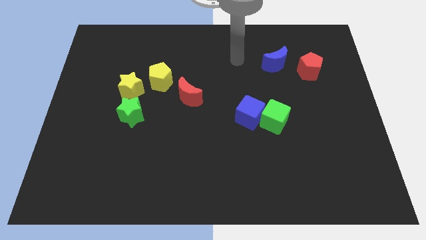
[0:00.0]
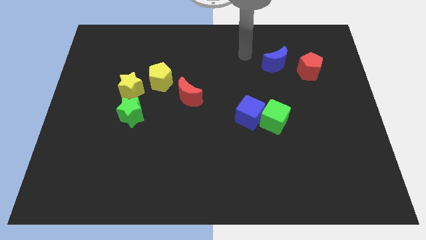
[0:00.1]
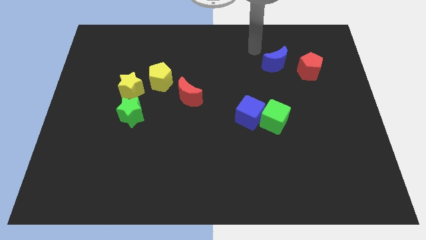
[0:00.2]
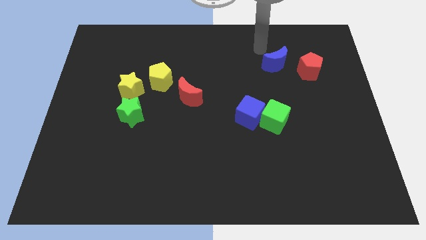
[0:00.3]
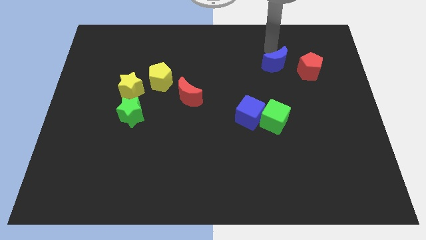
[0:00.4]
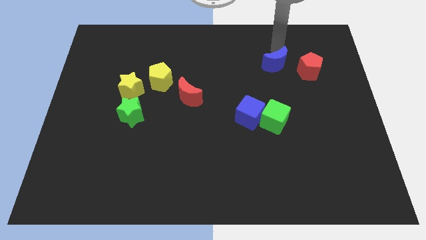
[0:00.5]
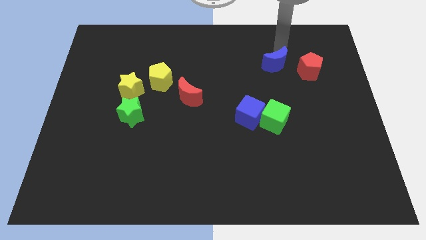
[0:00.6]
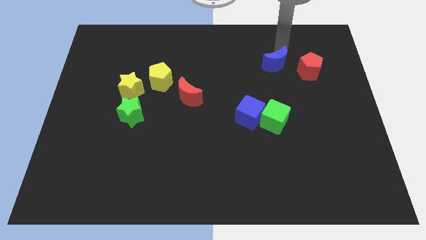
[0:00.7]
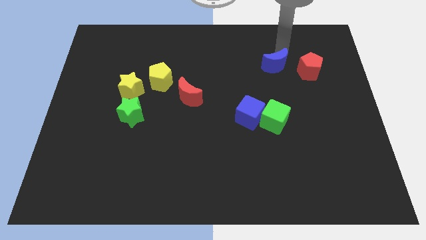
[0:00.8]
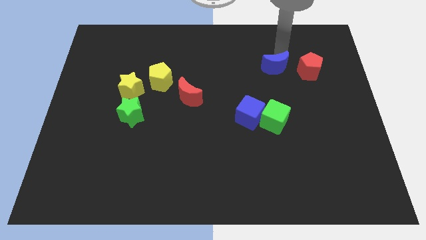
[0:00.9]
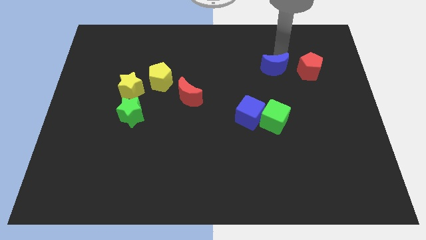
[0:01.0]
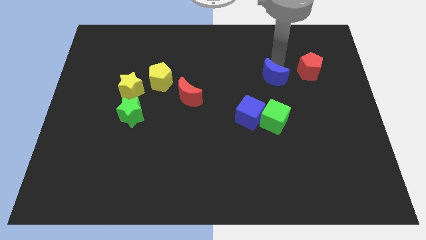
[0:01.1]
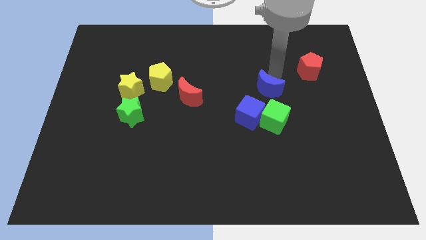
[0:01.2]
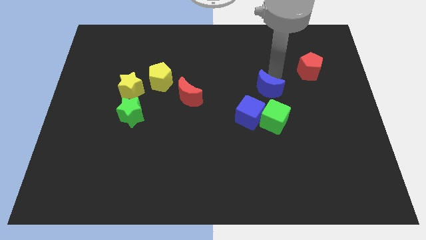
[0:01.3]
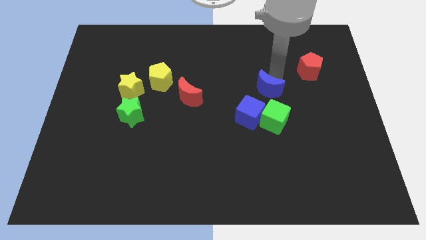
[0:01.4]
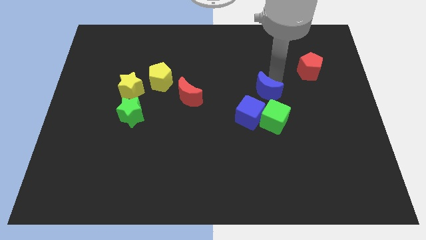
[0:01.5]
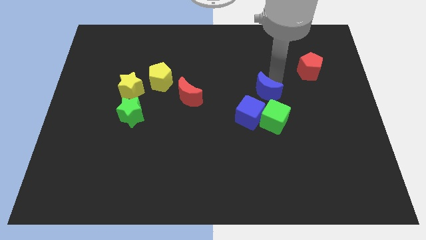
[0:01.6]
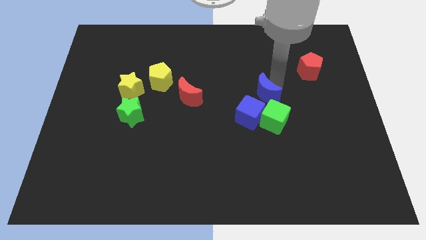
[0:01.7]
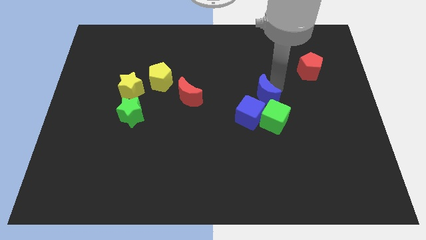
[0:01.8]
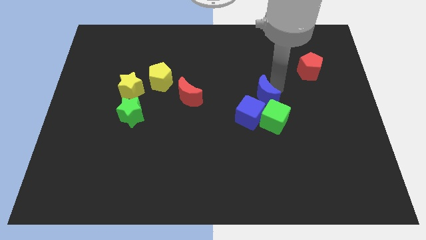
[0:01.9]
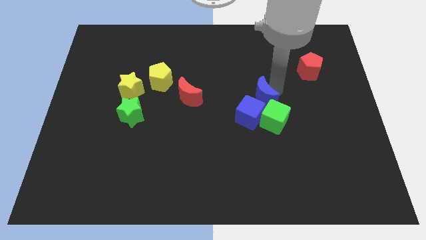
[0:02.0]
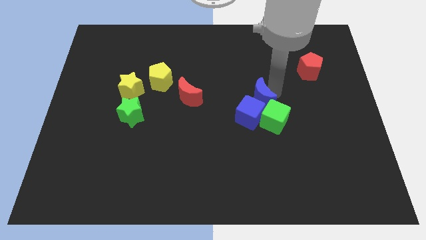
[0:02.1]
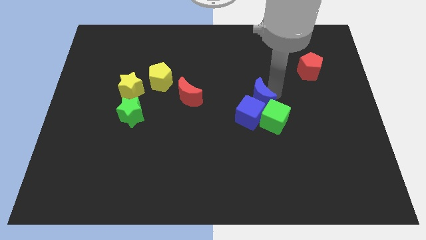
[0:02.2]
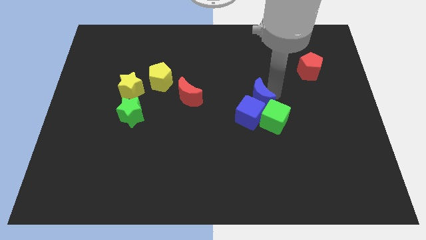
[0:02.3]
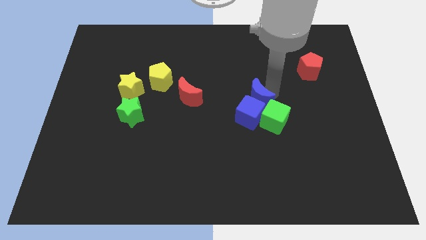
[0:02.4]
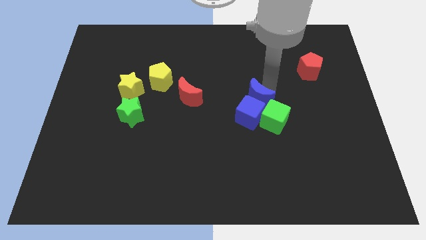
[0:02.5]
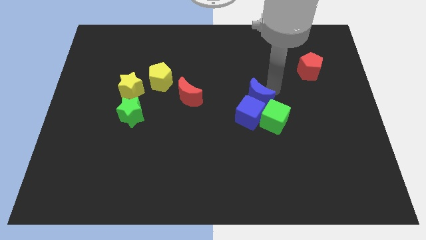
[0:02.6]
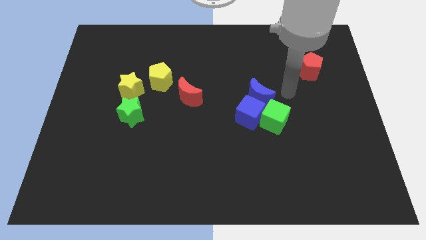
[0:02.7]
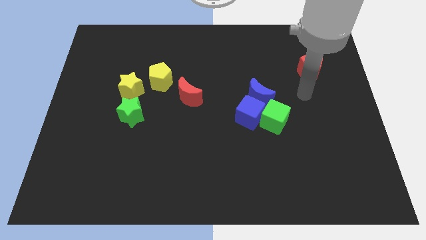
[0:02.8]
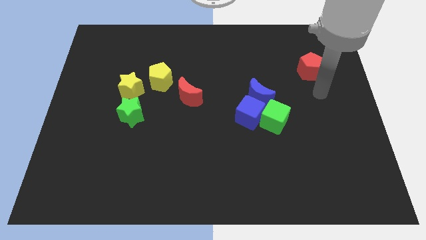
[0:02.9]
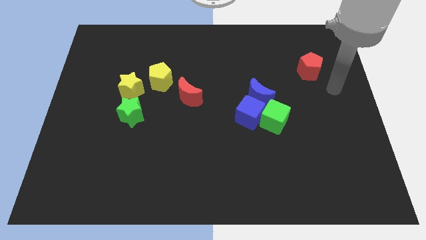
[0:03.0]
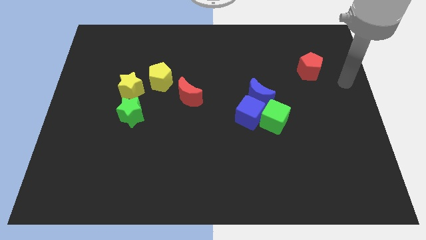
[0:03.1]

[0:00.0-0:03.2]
move blue crescent close to blue cube

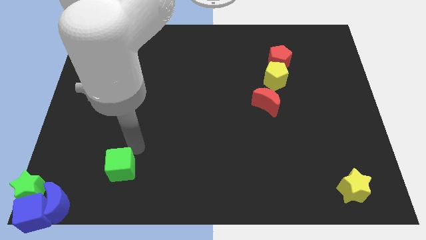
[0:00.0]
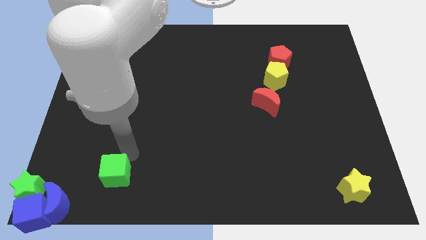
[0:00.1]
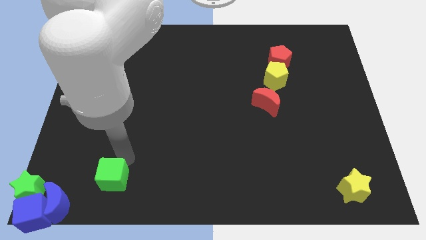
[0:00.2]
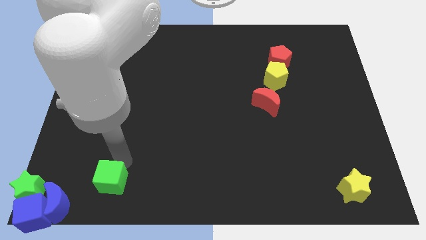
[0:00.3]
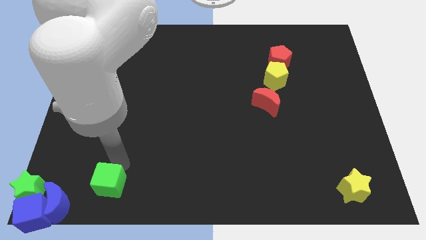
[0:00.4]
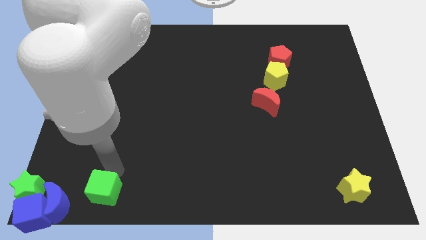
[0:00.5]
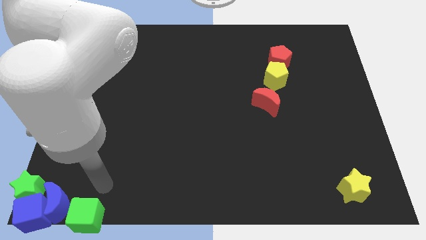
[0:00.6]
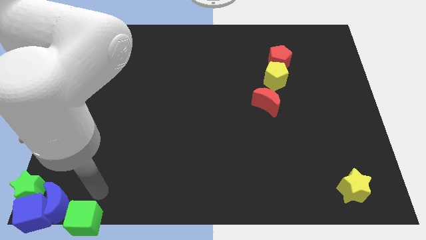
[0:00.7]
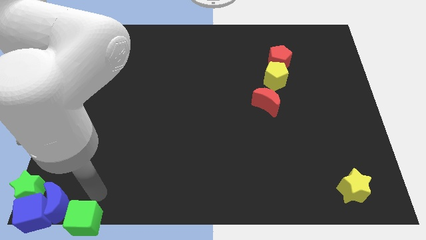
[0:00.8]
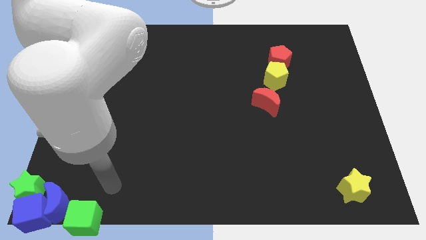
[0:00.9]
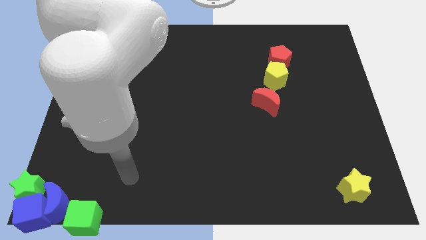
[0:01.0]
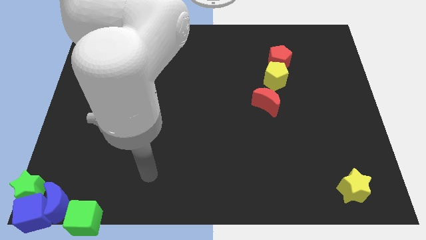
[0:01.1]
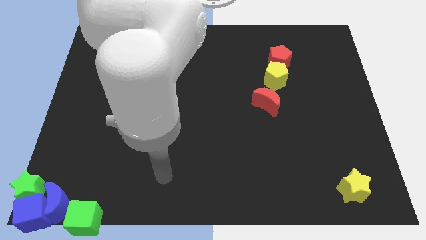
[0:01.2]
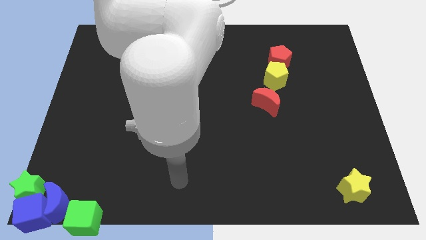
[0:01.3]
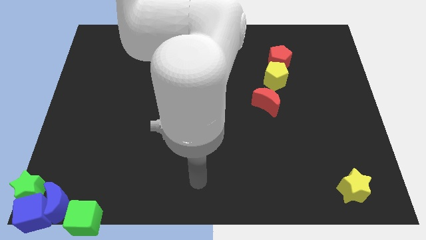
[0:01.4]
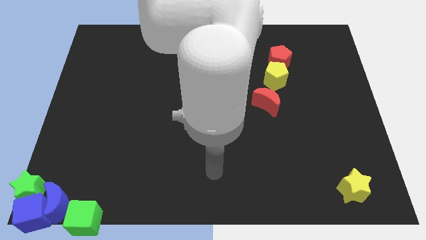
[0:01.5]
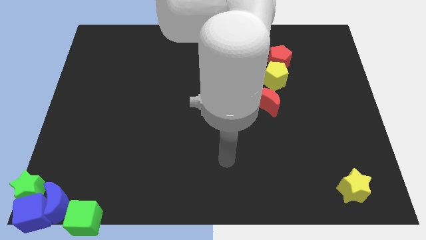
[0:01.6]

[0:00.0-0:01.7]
place the green cube right to the blue moon

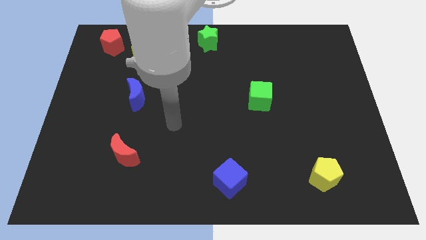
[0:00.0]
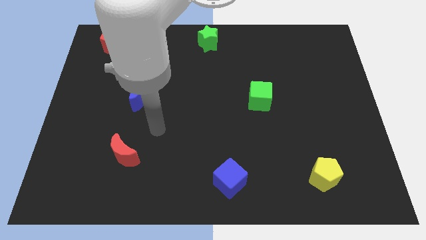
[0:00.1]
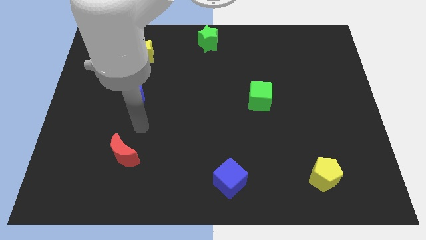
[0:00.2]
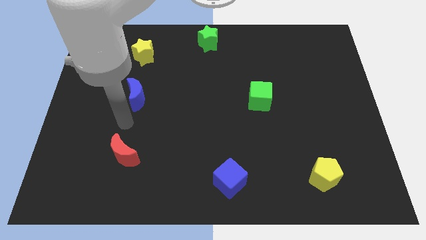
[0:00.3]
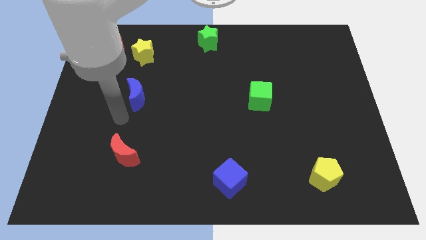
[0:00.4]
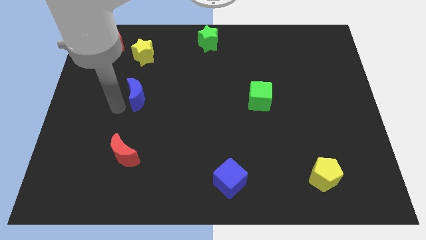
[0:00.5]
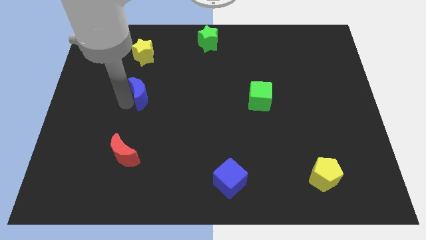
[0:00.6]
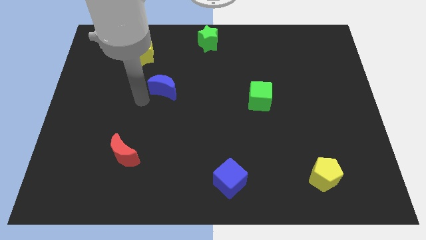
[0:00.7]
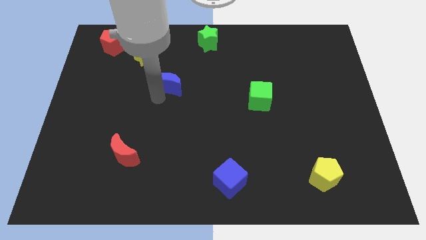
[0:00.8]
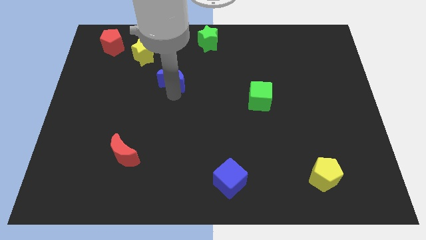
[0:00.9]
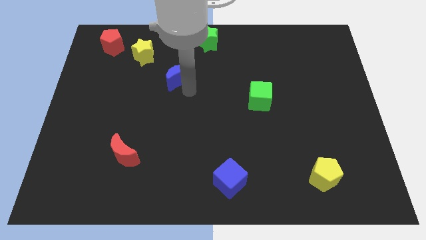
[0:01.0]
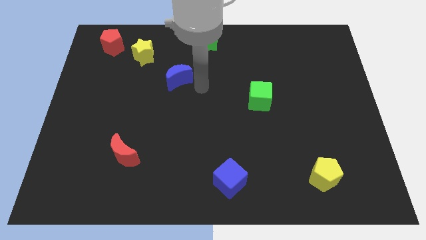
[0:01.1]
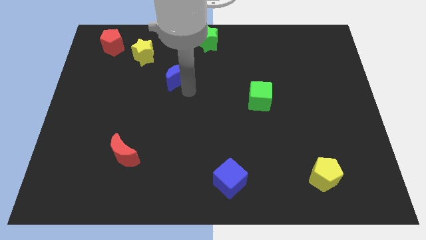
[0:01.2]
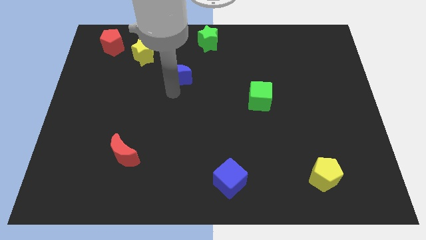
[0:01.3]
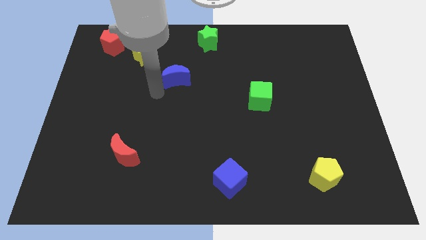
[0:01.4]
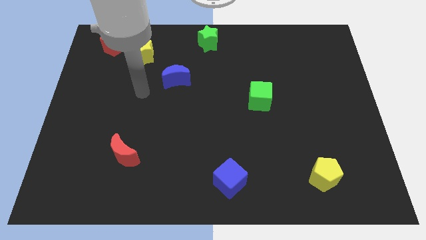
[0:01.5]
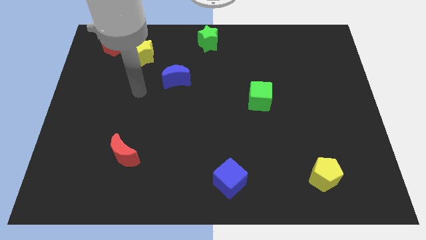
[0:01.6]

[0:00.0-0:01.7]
push the blue crescent towards the green star

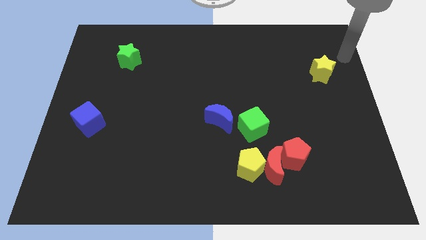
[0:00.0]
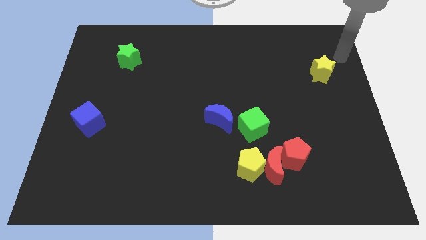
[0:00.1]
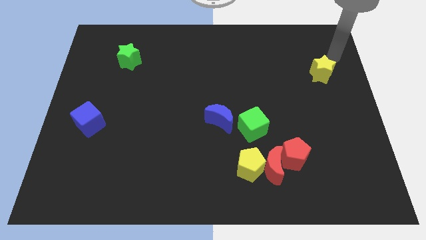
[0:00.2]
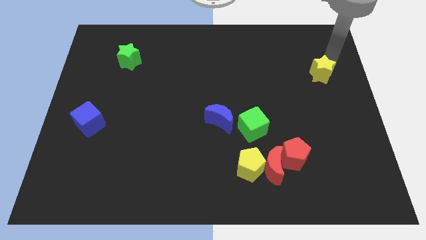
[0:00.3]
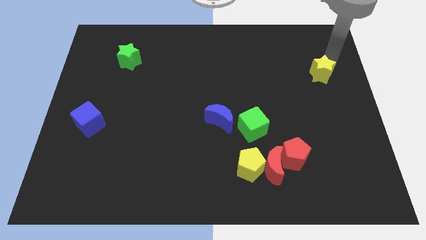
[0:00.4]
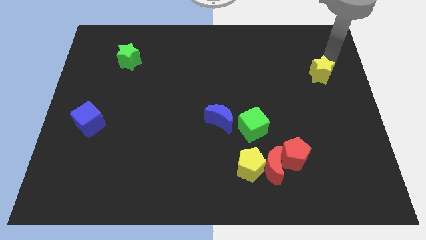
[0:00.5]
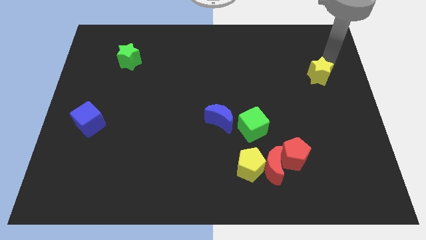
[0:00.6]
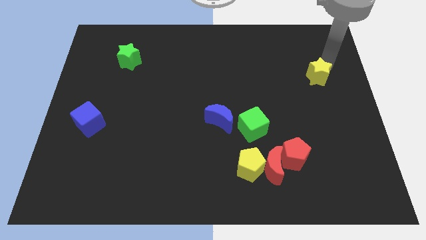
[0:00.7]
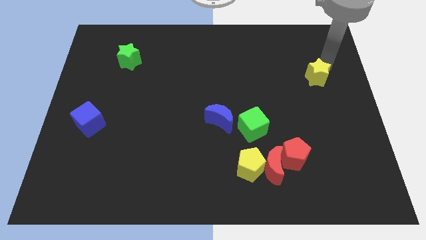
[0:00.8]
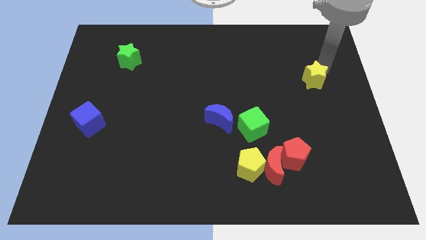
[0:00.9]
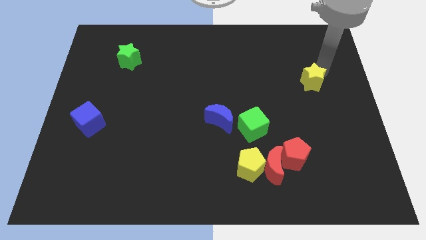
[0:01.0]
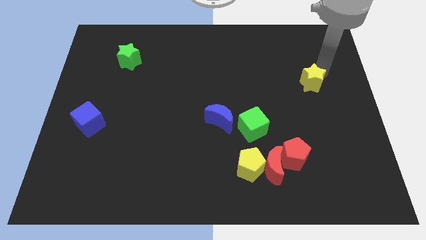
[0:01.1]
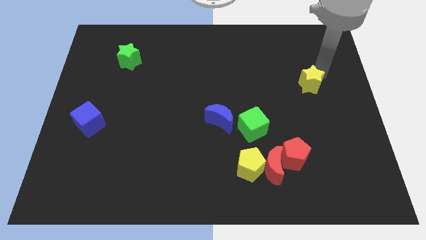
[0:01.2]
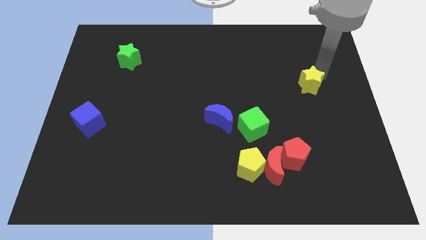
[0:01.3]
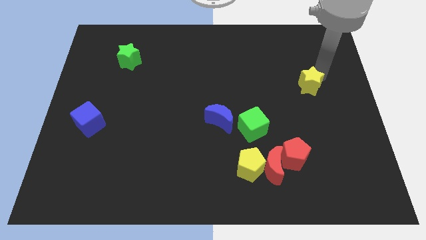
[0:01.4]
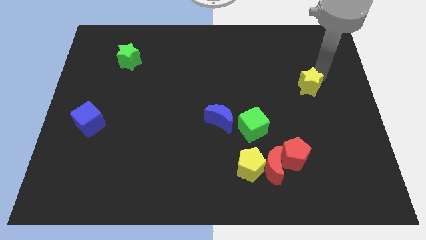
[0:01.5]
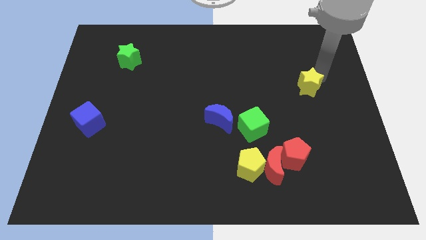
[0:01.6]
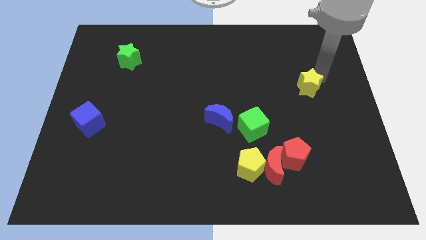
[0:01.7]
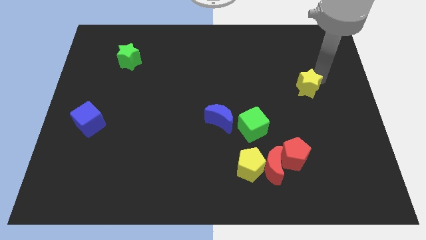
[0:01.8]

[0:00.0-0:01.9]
push the yellow star towards the green cube

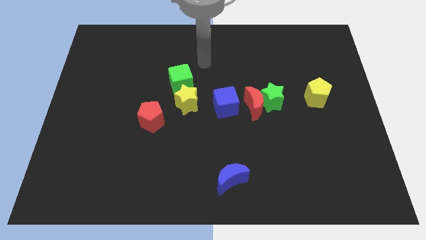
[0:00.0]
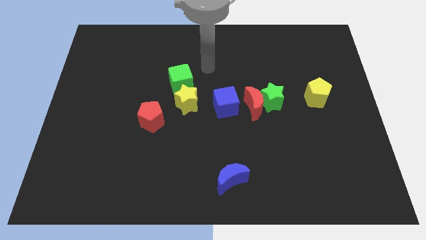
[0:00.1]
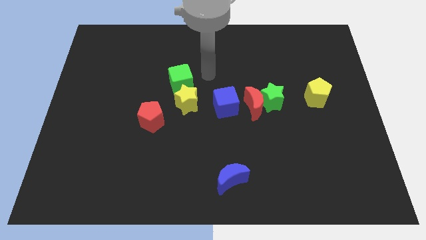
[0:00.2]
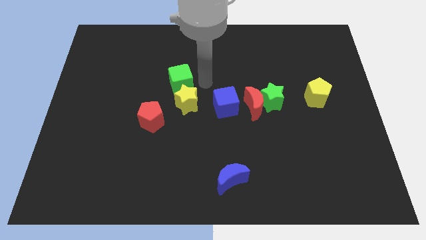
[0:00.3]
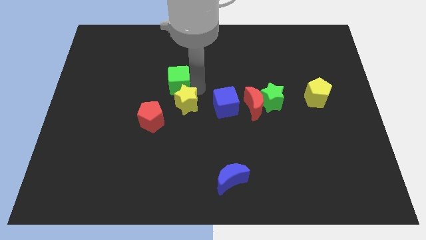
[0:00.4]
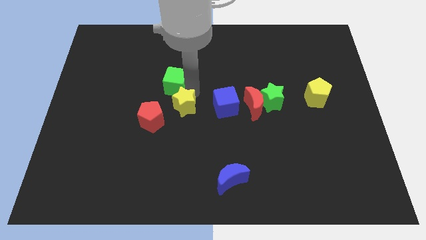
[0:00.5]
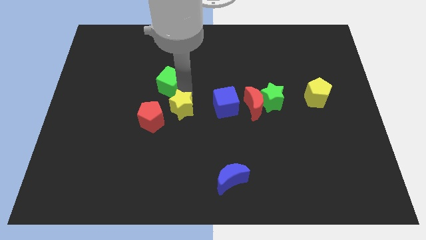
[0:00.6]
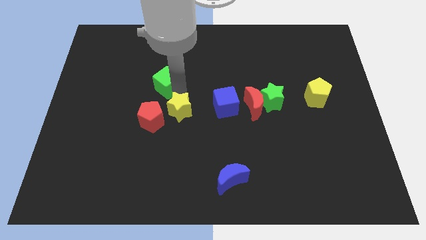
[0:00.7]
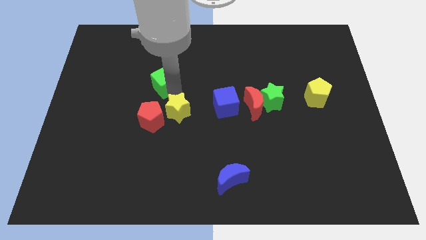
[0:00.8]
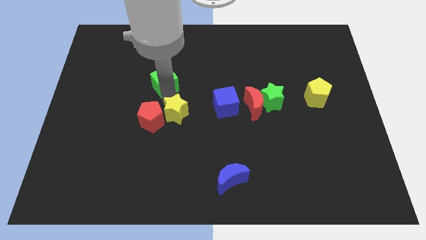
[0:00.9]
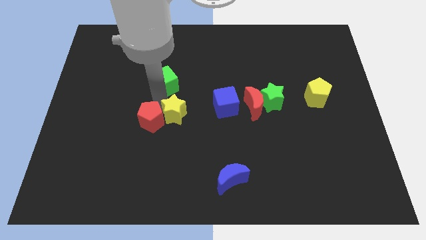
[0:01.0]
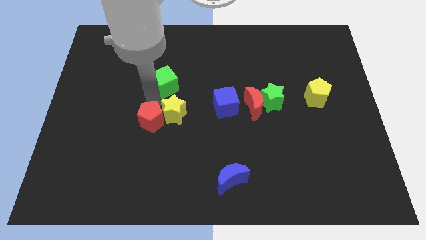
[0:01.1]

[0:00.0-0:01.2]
move the yellow star and green cube to the red pentagon
